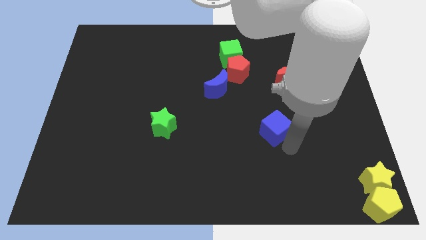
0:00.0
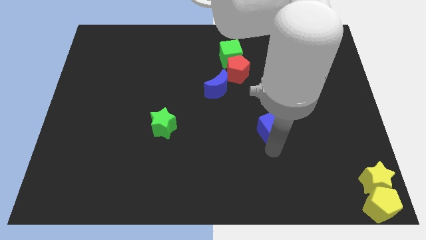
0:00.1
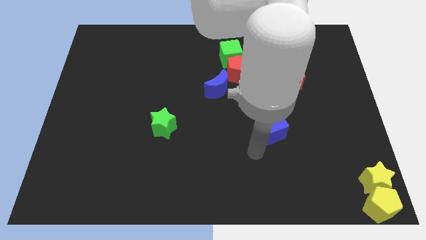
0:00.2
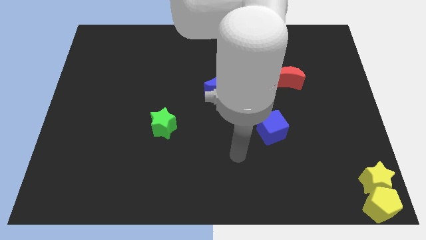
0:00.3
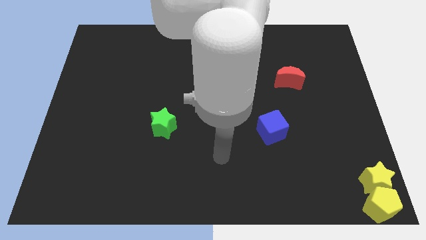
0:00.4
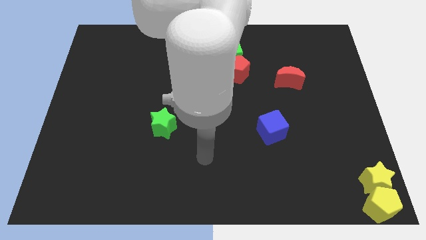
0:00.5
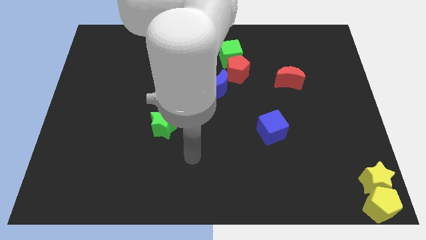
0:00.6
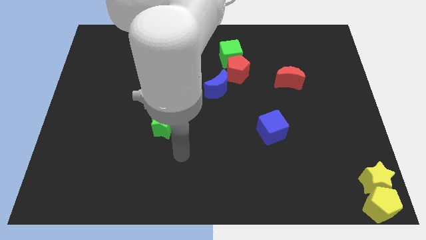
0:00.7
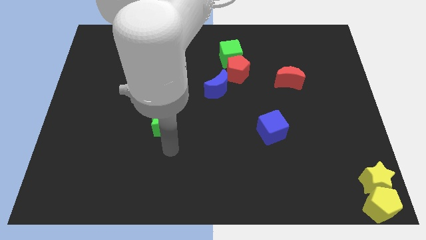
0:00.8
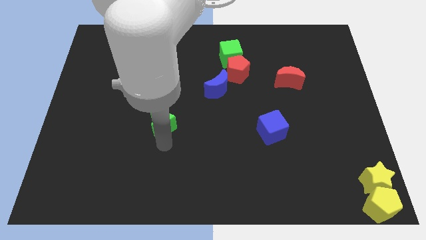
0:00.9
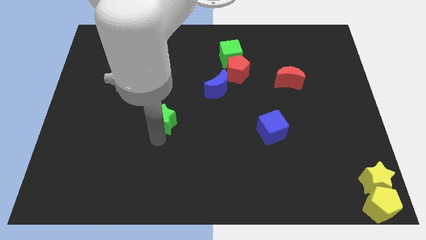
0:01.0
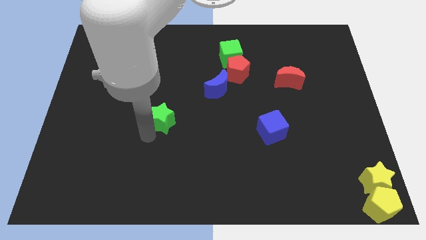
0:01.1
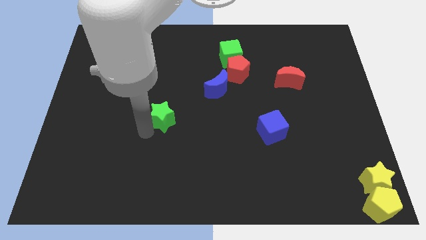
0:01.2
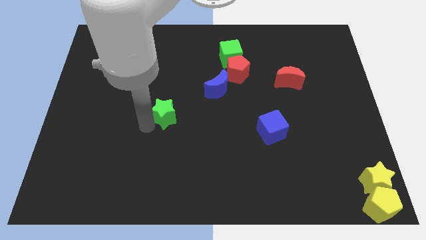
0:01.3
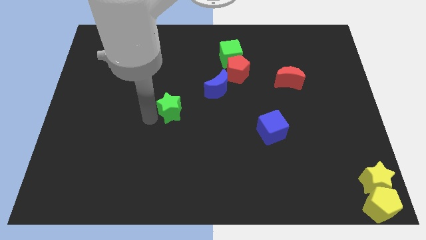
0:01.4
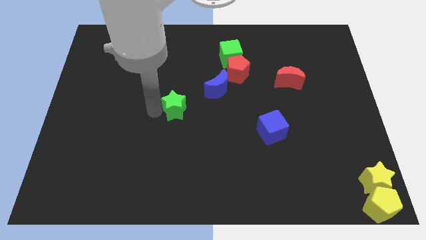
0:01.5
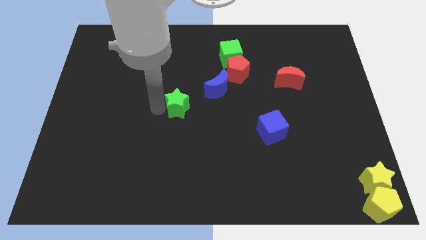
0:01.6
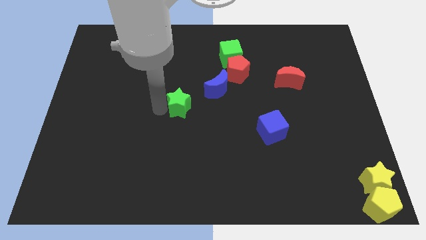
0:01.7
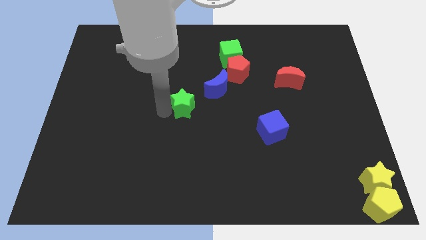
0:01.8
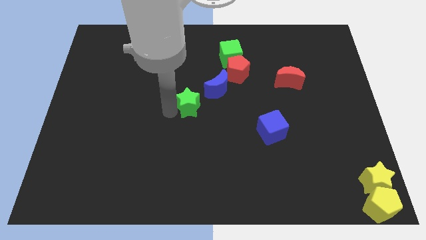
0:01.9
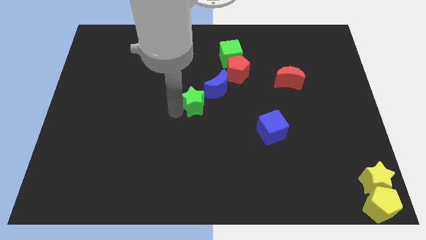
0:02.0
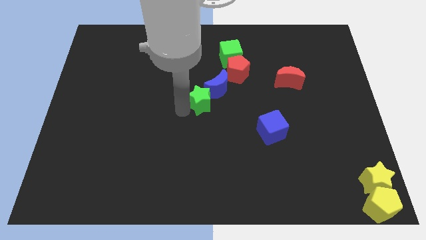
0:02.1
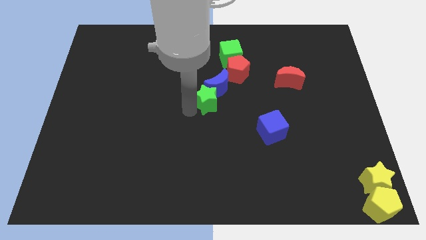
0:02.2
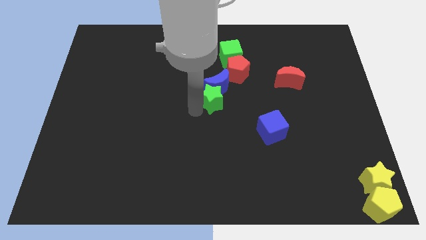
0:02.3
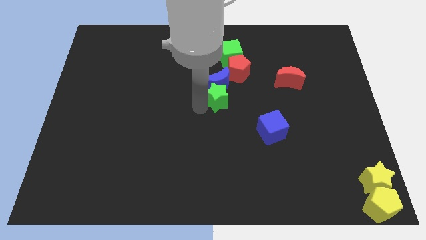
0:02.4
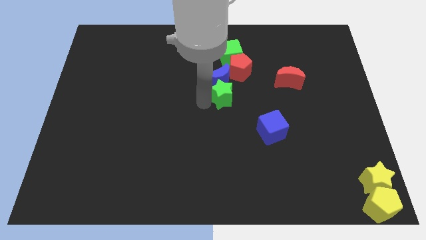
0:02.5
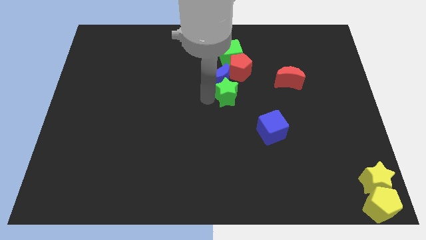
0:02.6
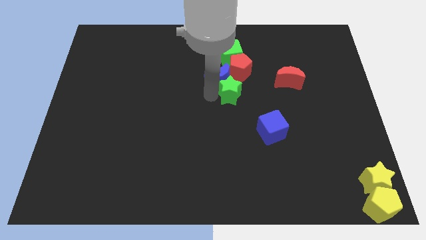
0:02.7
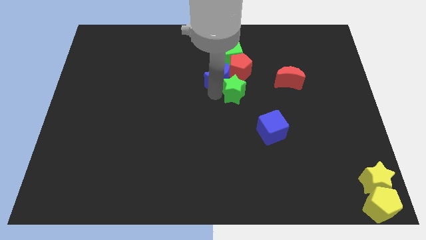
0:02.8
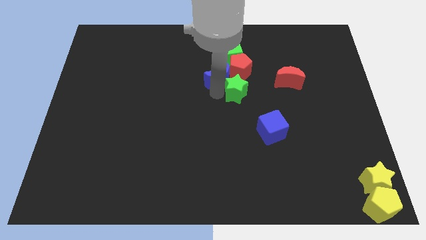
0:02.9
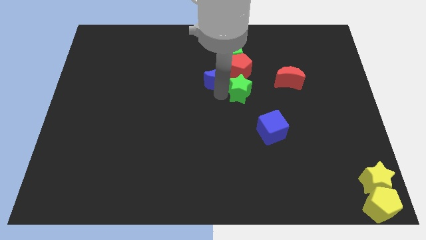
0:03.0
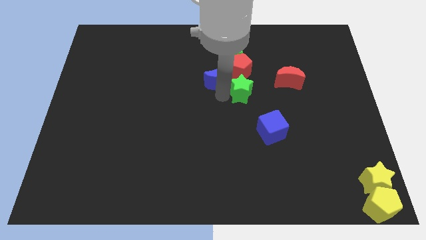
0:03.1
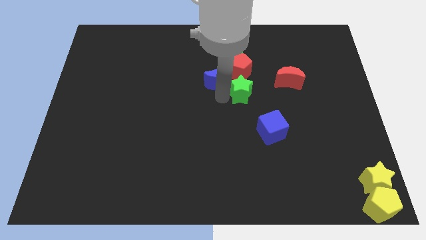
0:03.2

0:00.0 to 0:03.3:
place the green star below the red pentagon

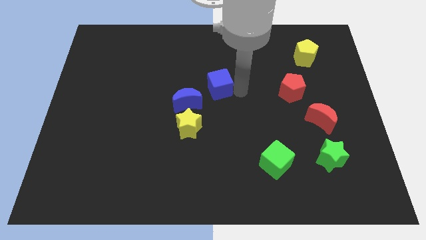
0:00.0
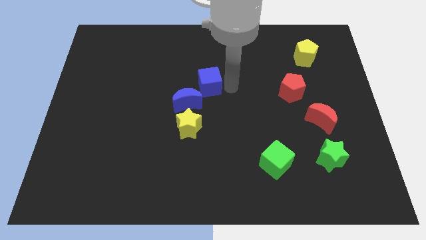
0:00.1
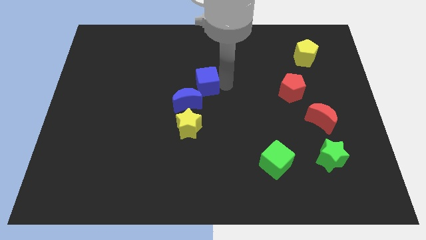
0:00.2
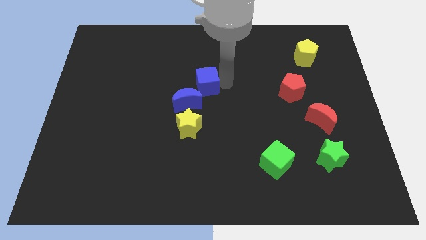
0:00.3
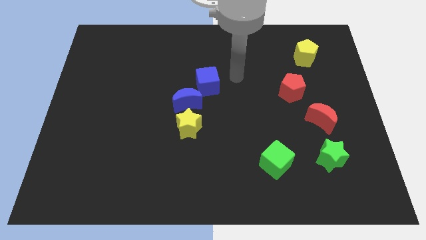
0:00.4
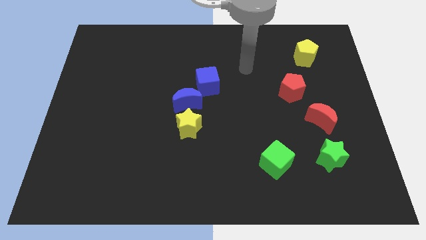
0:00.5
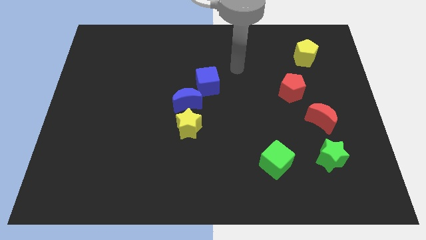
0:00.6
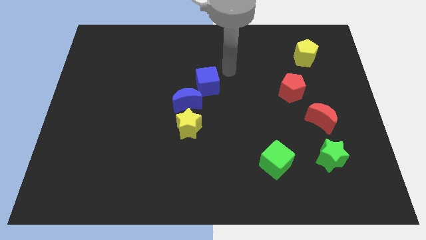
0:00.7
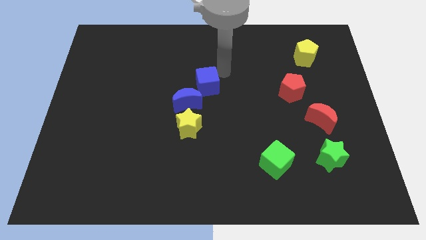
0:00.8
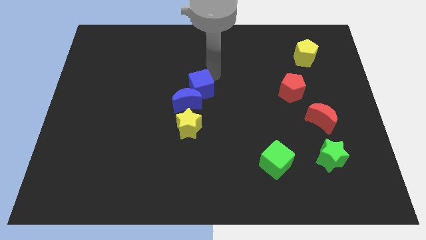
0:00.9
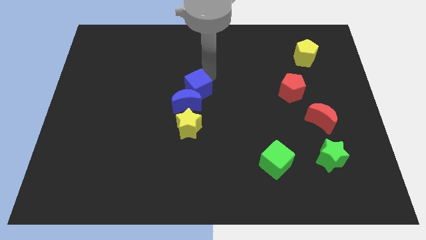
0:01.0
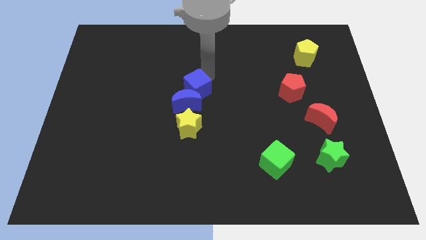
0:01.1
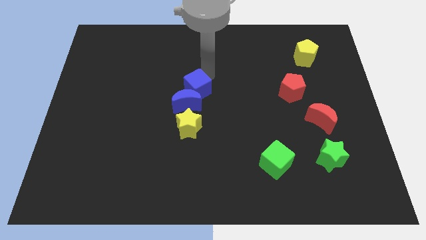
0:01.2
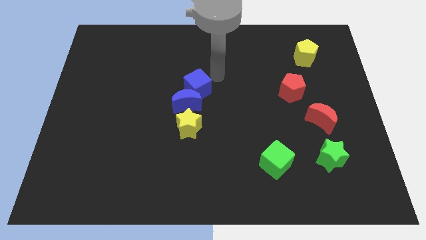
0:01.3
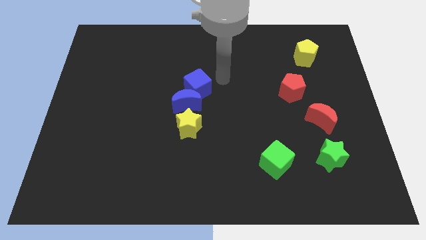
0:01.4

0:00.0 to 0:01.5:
move blue cube into blue moon

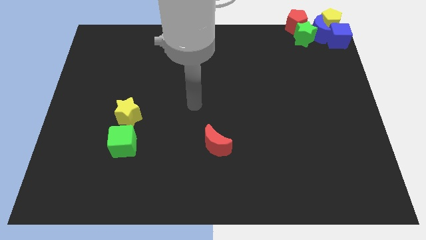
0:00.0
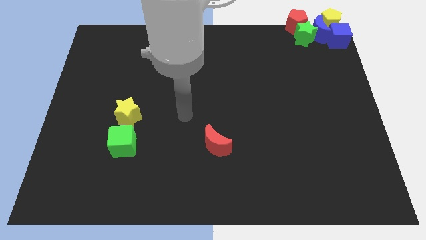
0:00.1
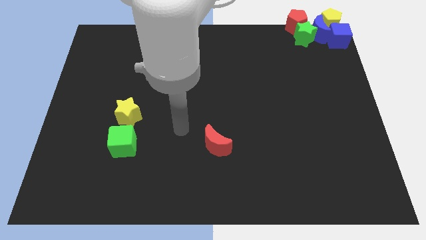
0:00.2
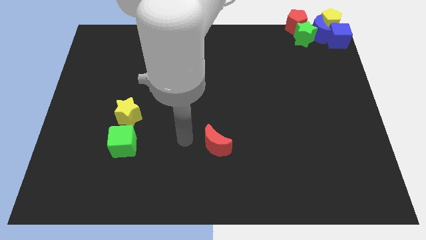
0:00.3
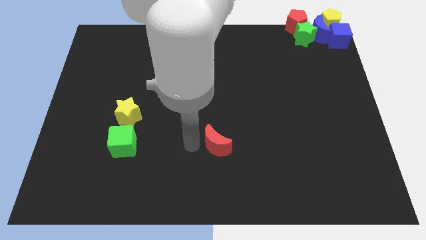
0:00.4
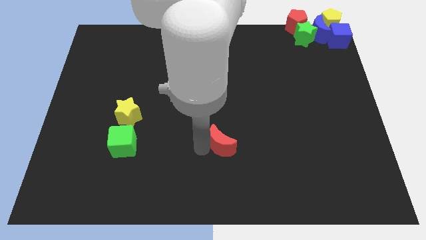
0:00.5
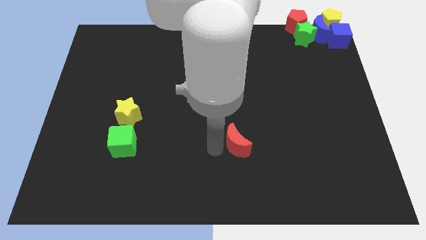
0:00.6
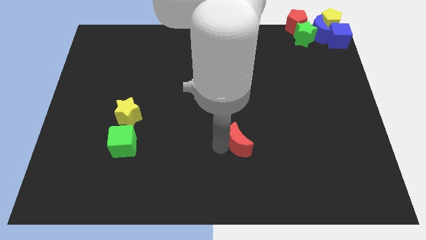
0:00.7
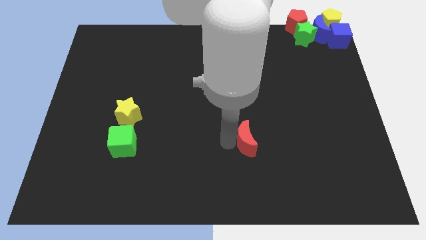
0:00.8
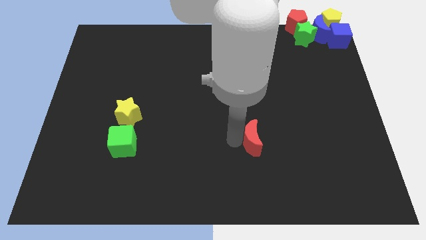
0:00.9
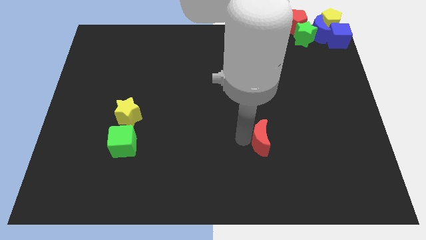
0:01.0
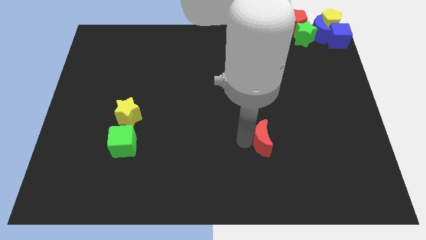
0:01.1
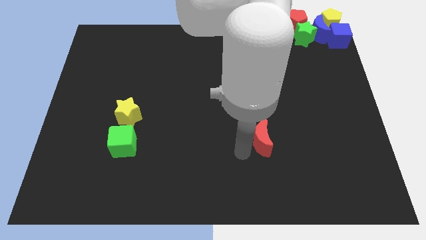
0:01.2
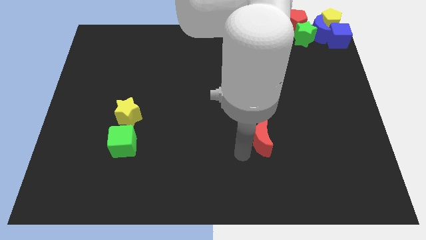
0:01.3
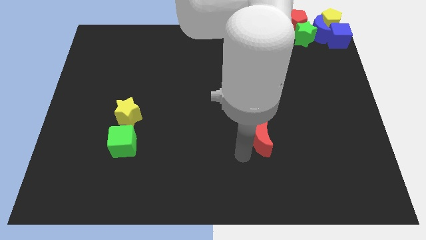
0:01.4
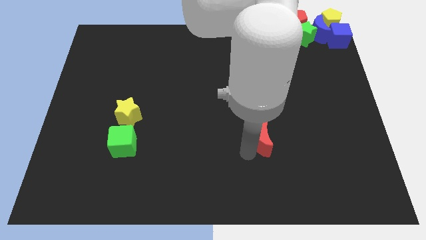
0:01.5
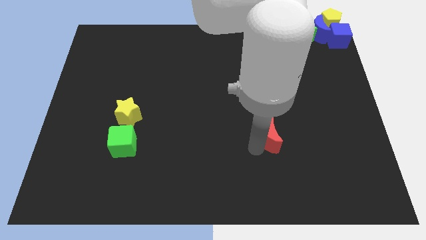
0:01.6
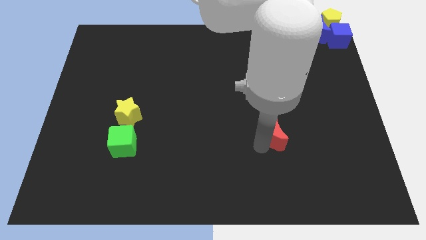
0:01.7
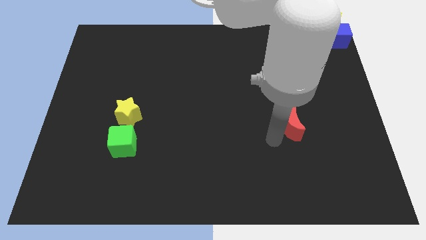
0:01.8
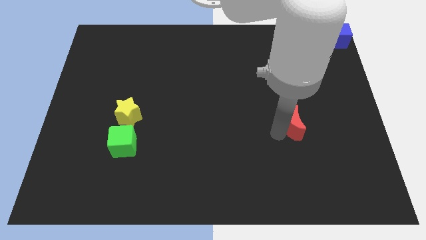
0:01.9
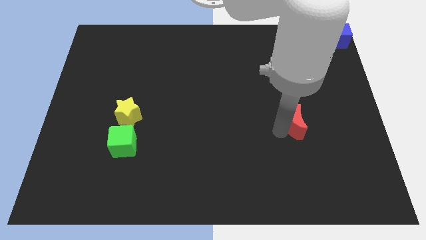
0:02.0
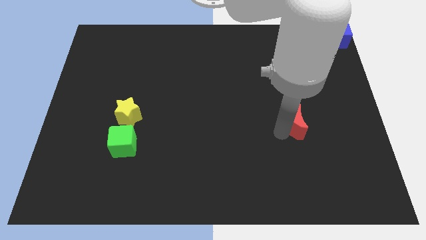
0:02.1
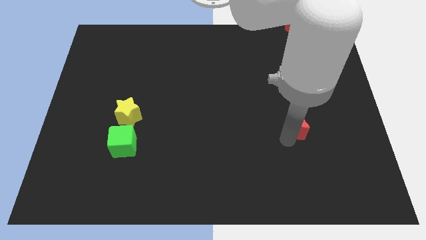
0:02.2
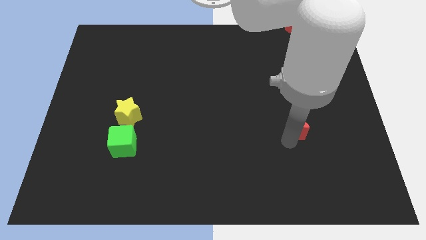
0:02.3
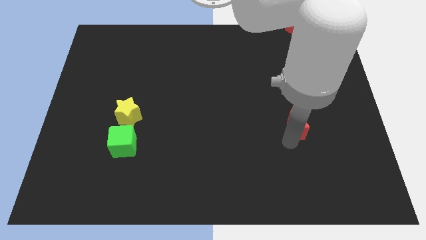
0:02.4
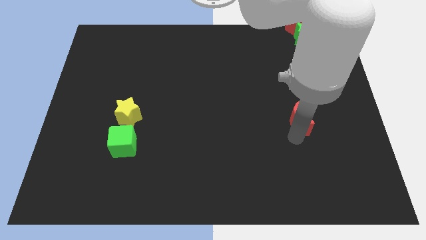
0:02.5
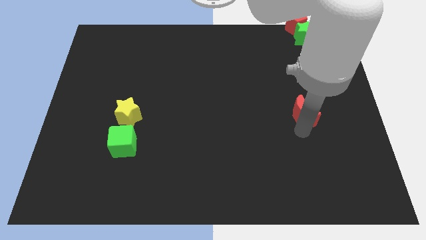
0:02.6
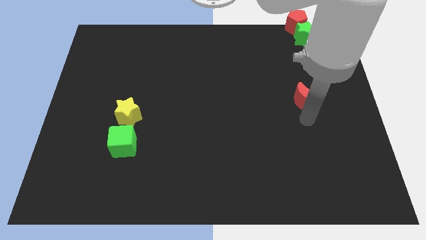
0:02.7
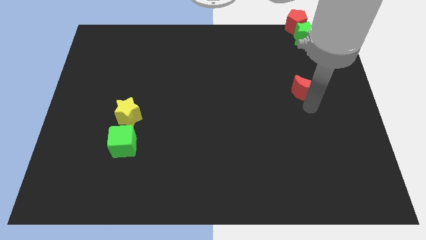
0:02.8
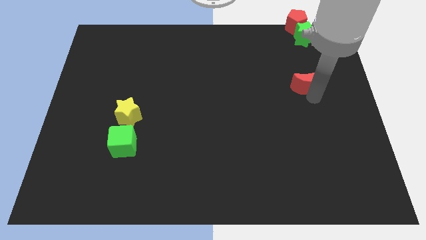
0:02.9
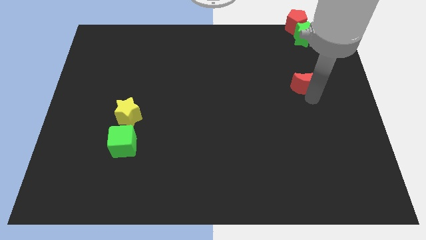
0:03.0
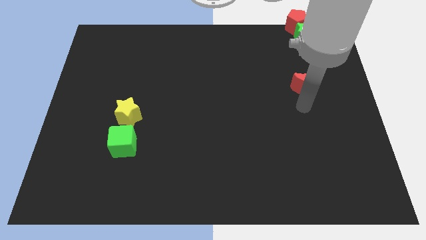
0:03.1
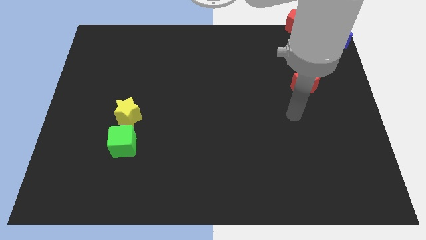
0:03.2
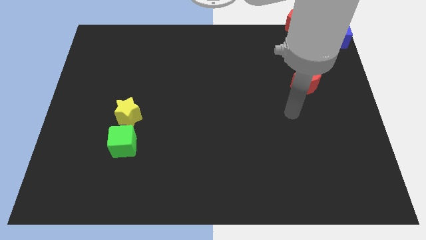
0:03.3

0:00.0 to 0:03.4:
move the red moon towards center right

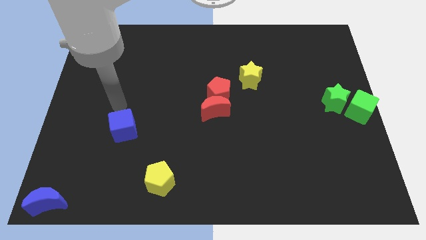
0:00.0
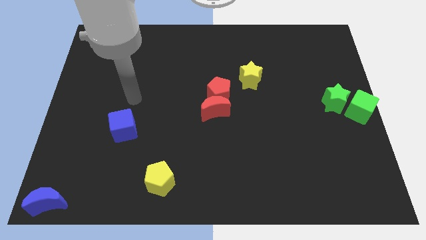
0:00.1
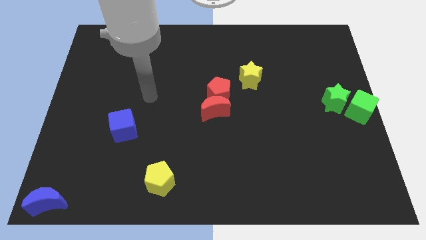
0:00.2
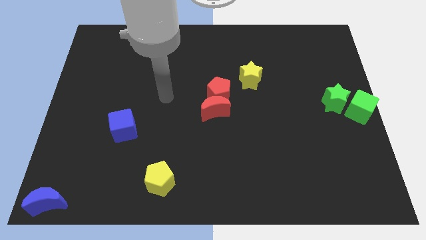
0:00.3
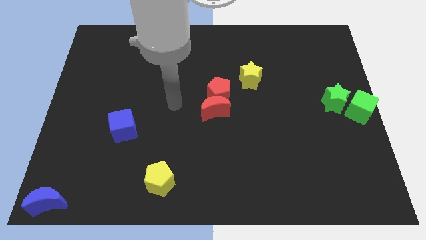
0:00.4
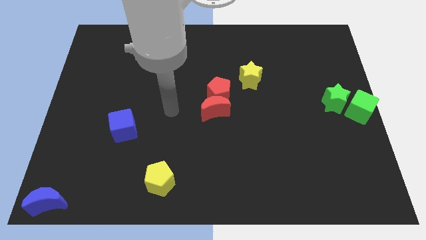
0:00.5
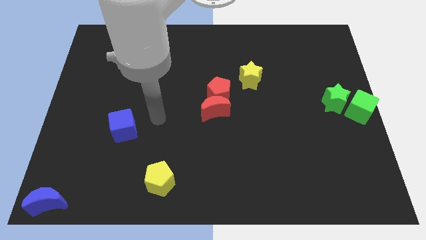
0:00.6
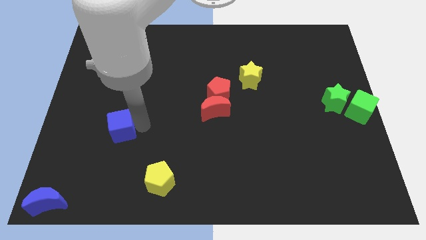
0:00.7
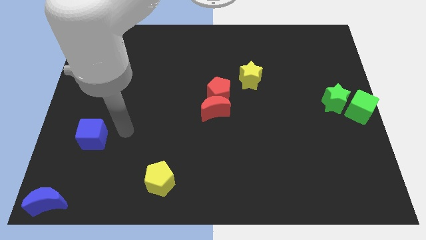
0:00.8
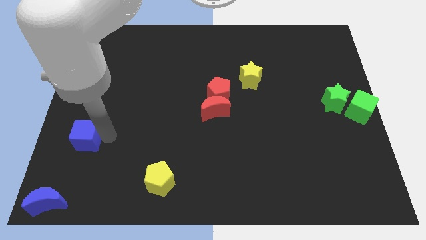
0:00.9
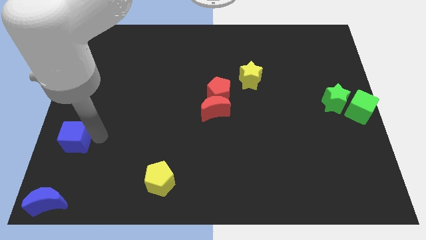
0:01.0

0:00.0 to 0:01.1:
move the blue cube towards the left
